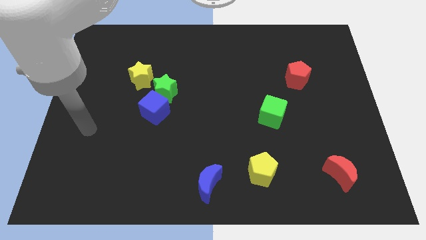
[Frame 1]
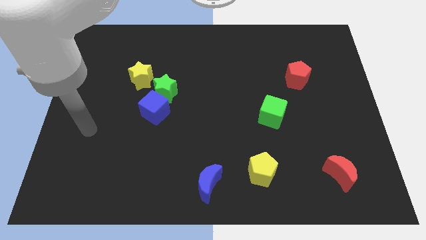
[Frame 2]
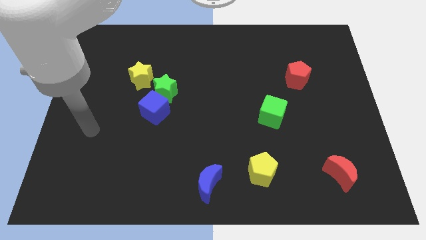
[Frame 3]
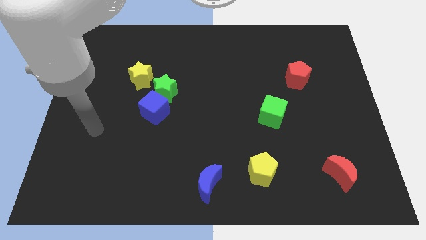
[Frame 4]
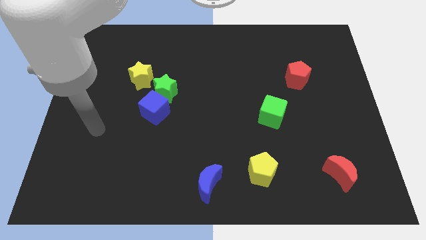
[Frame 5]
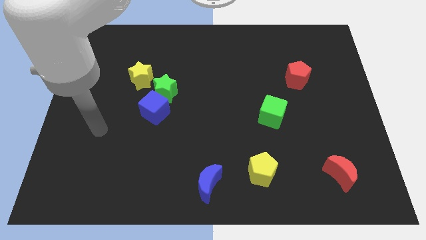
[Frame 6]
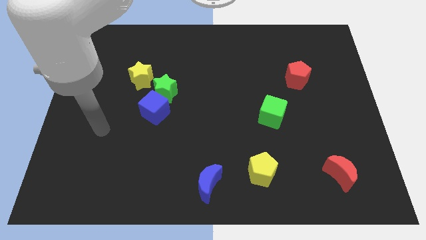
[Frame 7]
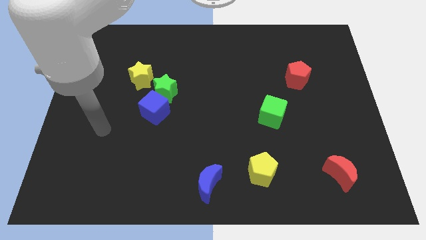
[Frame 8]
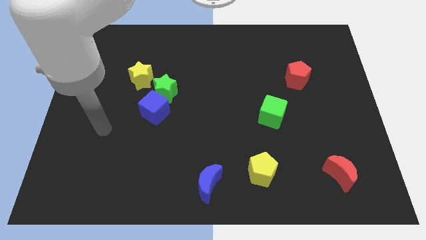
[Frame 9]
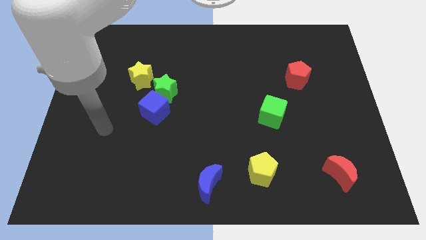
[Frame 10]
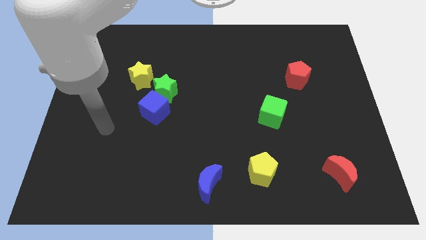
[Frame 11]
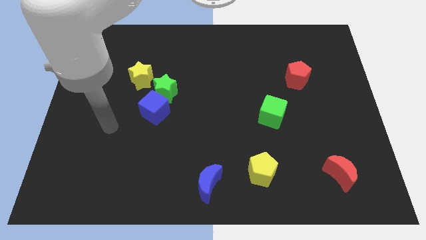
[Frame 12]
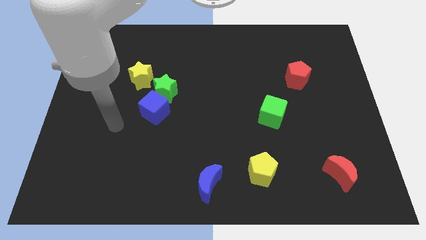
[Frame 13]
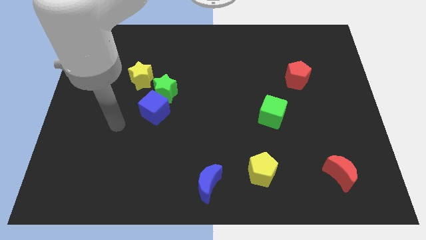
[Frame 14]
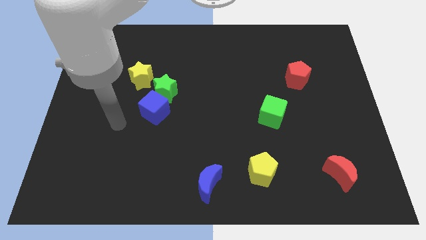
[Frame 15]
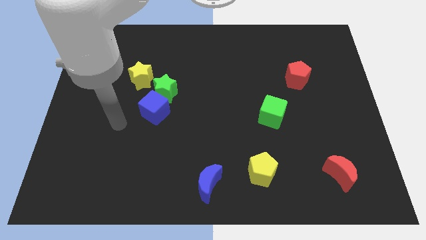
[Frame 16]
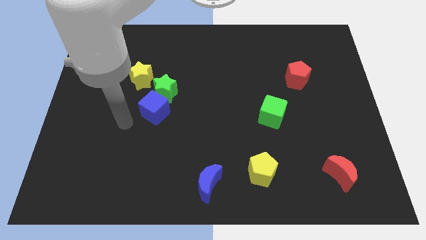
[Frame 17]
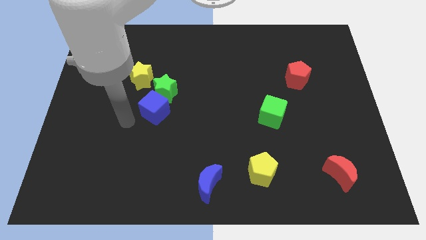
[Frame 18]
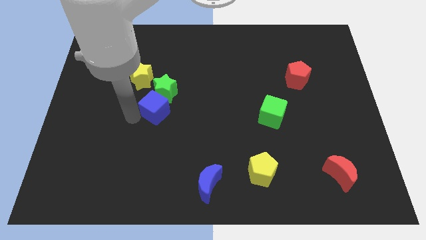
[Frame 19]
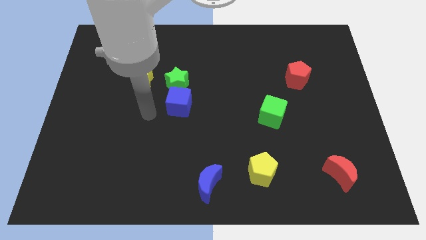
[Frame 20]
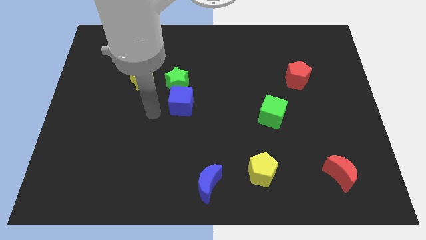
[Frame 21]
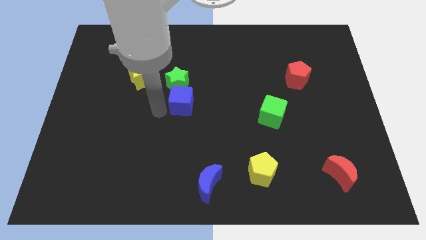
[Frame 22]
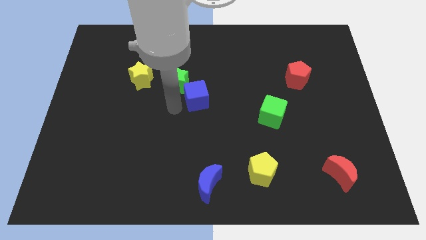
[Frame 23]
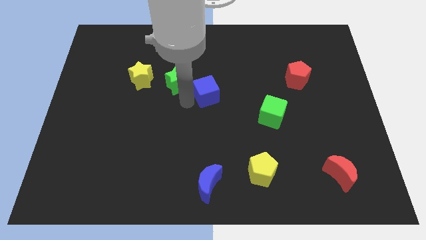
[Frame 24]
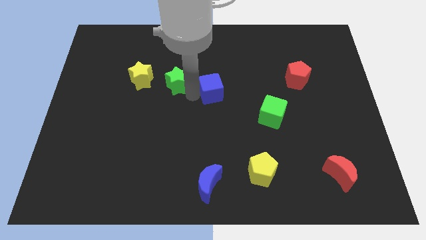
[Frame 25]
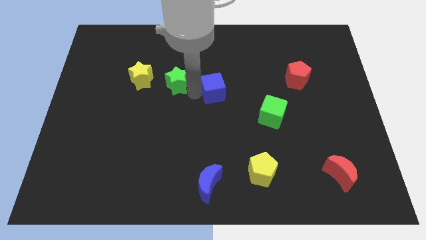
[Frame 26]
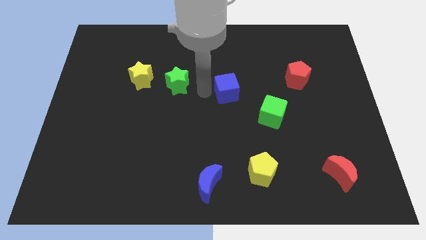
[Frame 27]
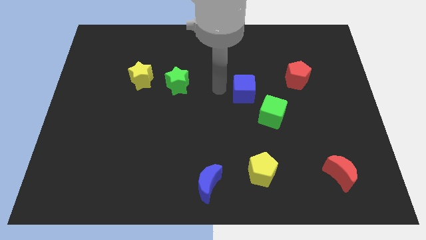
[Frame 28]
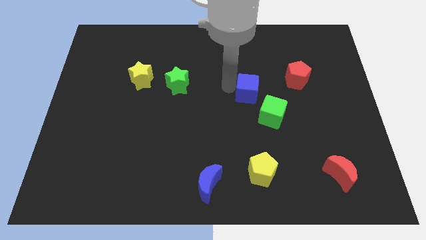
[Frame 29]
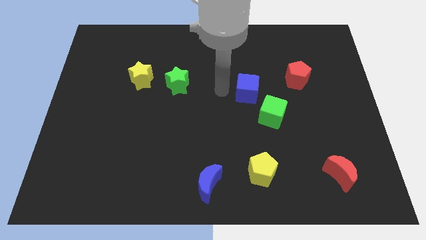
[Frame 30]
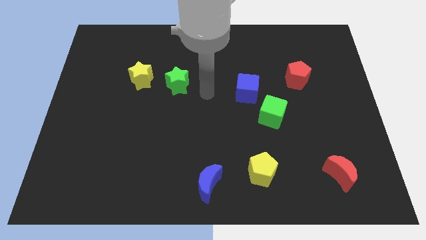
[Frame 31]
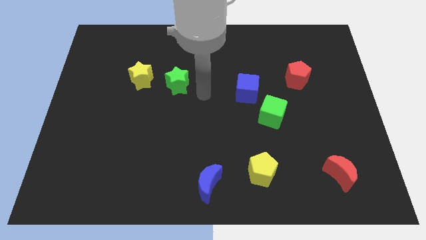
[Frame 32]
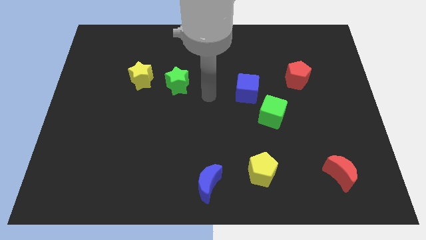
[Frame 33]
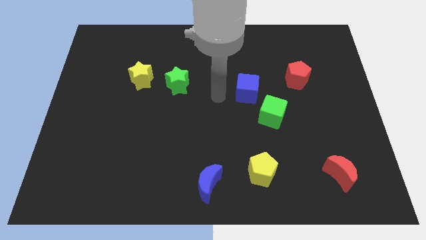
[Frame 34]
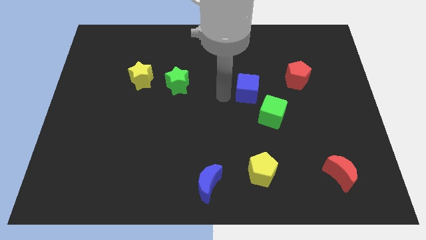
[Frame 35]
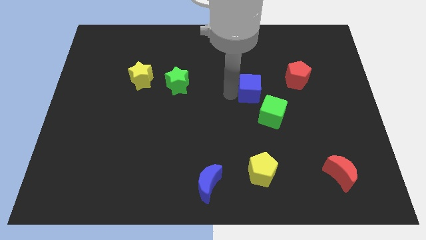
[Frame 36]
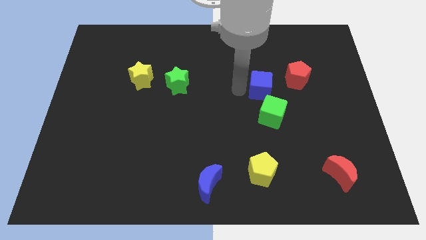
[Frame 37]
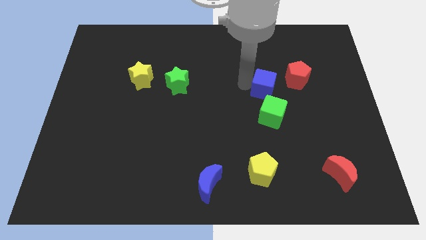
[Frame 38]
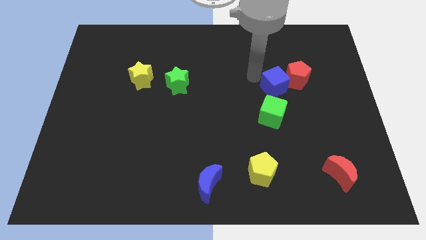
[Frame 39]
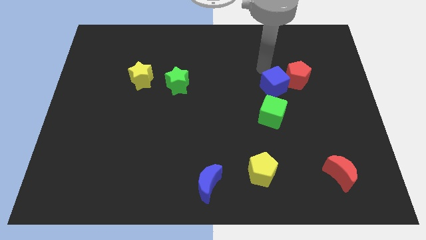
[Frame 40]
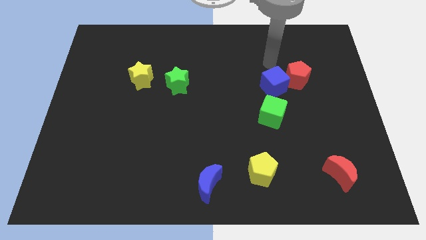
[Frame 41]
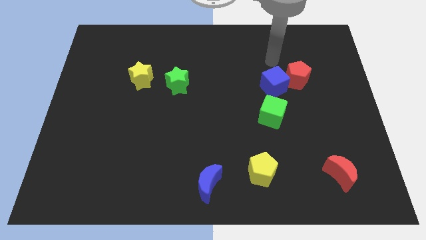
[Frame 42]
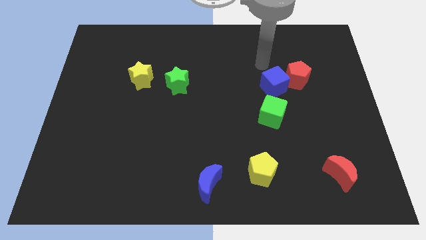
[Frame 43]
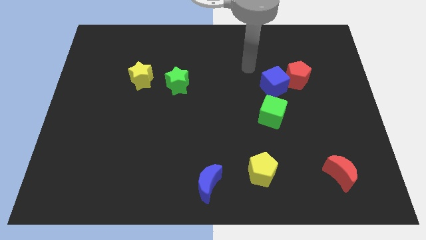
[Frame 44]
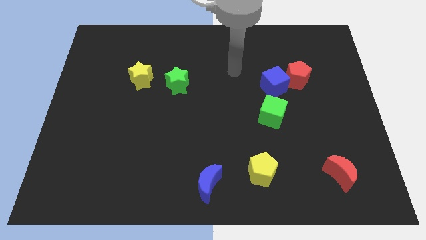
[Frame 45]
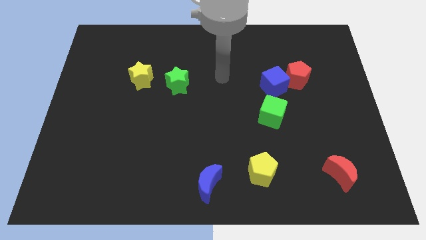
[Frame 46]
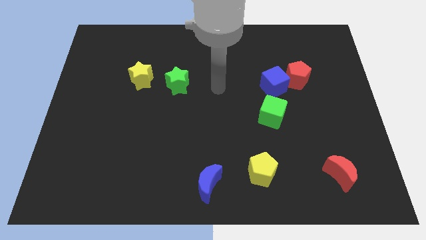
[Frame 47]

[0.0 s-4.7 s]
push the blue cube into the red pentagon

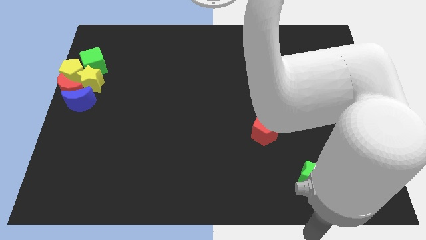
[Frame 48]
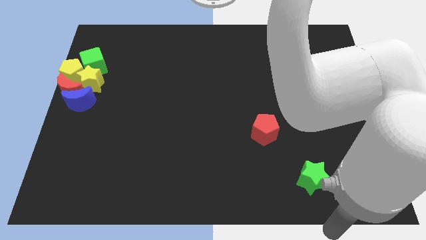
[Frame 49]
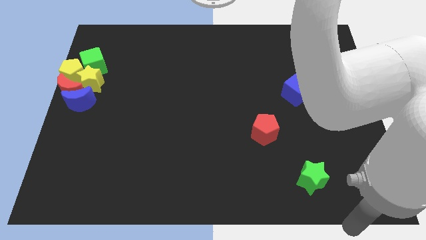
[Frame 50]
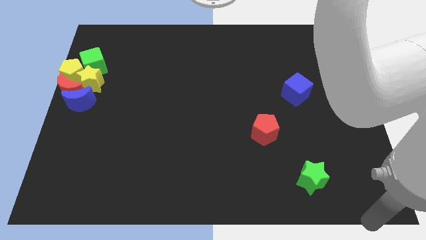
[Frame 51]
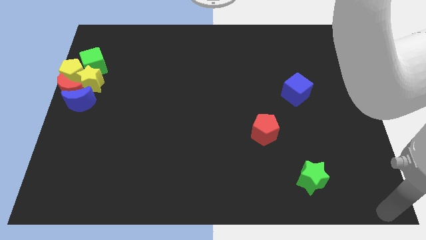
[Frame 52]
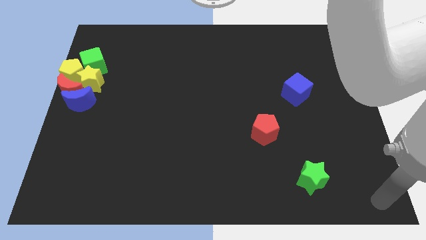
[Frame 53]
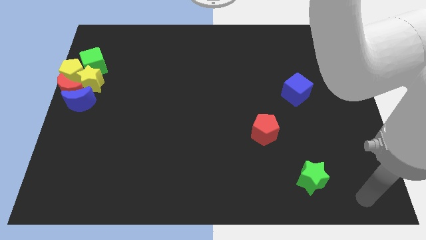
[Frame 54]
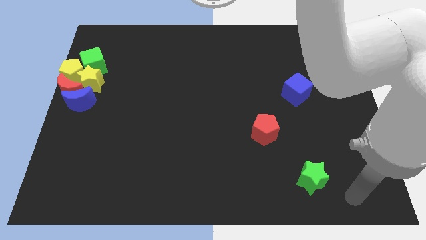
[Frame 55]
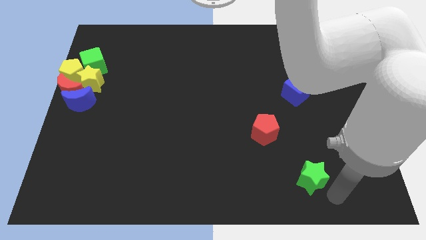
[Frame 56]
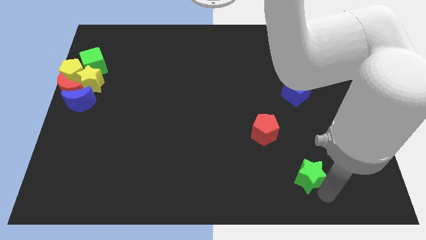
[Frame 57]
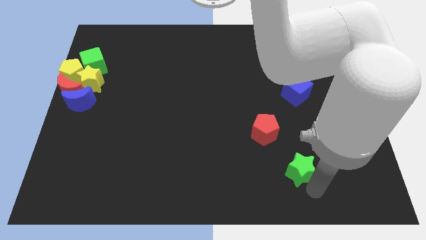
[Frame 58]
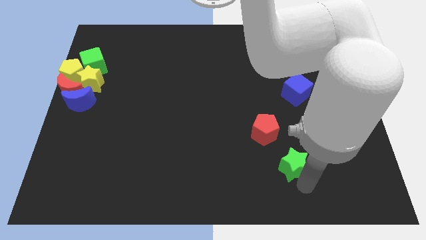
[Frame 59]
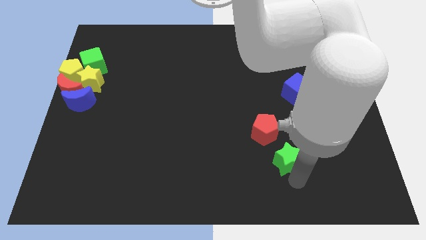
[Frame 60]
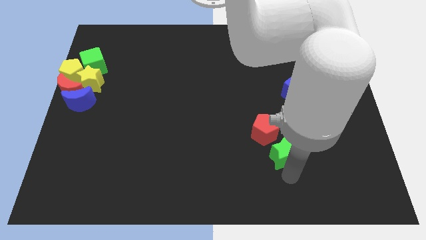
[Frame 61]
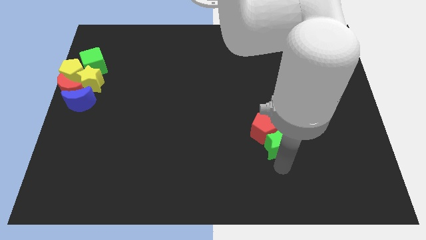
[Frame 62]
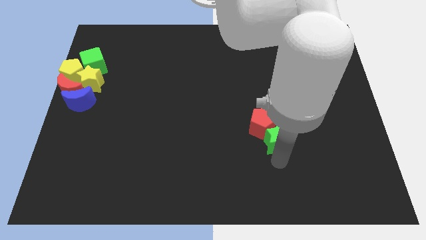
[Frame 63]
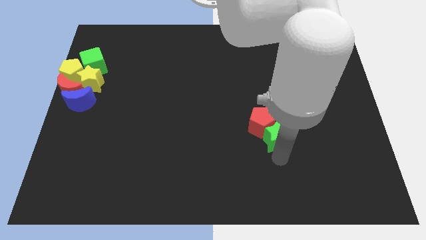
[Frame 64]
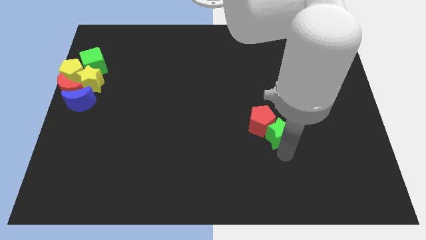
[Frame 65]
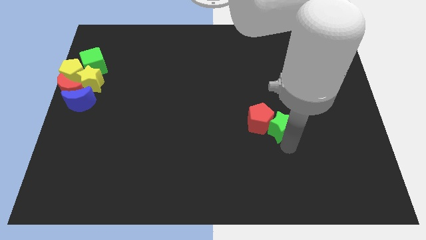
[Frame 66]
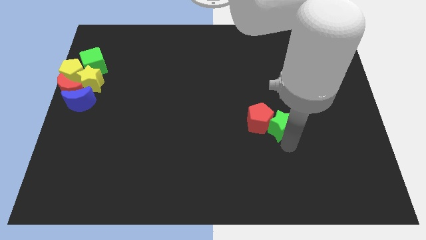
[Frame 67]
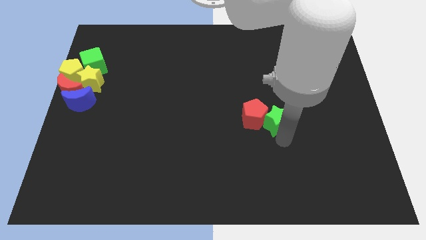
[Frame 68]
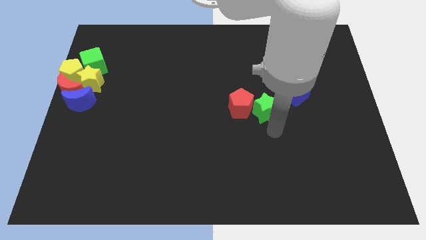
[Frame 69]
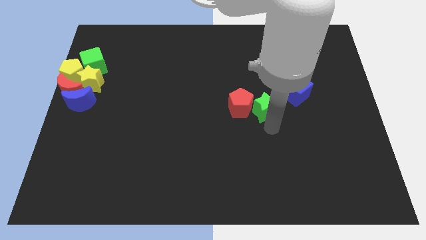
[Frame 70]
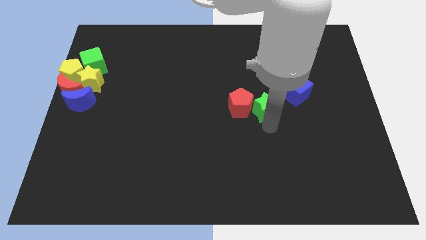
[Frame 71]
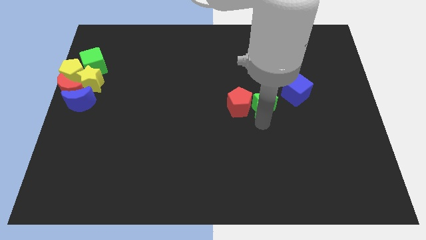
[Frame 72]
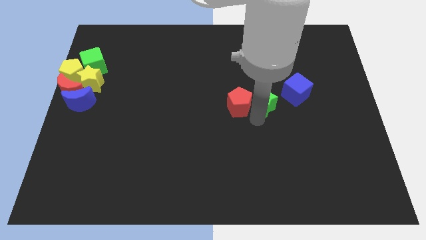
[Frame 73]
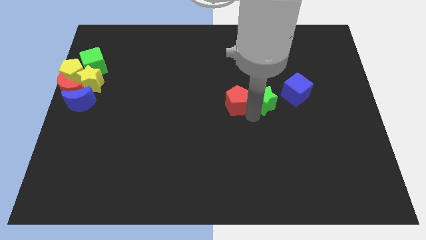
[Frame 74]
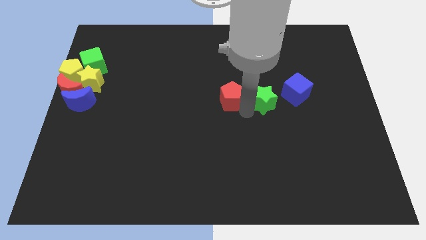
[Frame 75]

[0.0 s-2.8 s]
push the green star in between blue cube and red pentagon

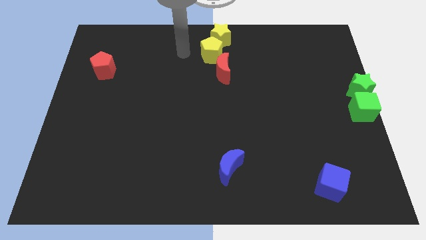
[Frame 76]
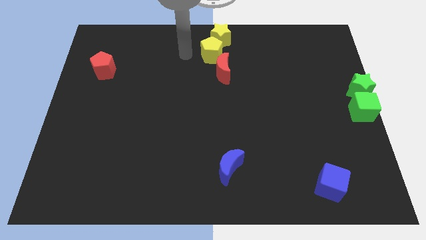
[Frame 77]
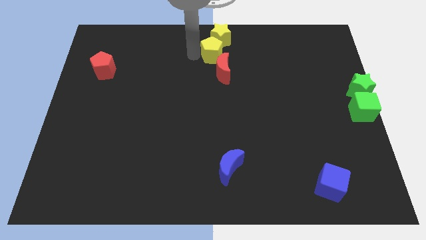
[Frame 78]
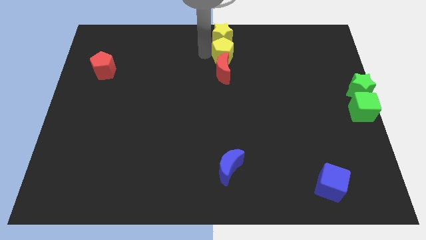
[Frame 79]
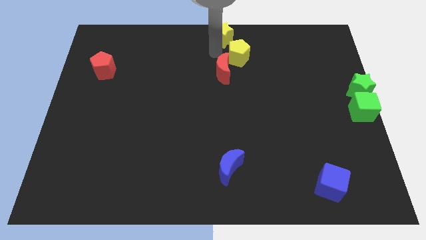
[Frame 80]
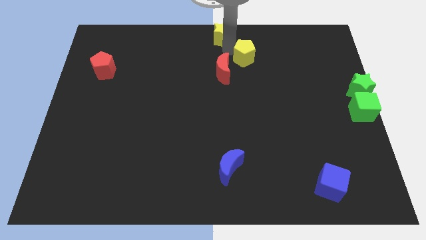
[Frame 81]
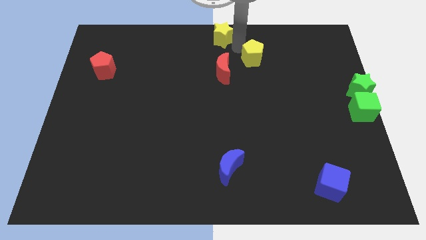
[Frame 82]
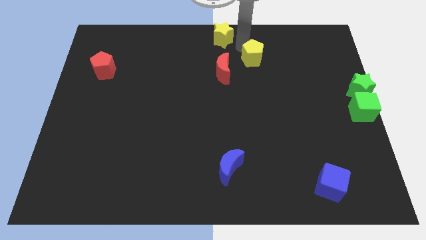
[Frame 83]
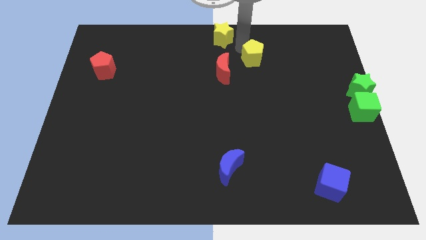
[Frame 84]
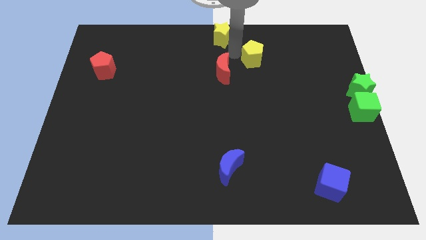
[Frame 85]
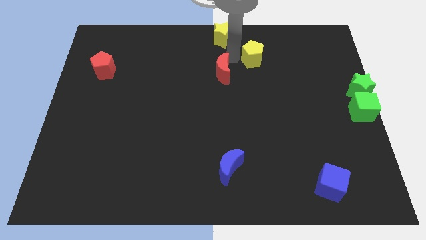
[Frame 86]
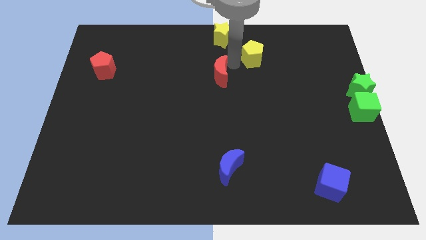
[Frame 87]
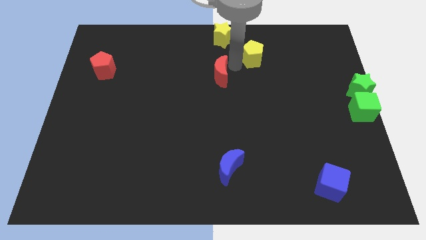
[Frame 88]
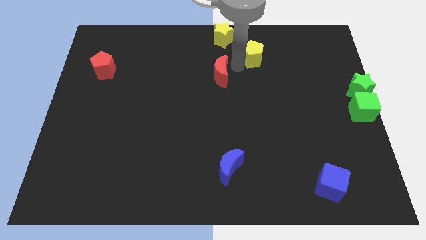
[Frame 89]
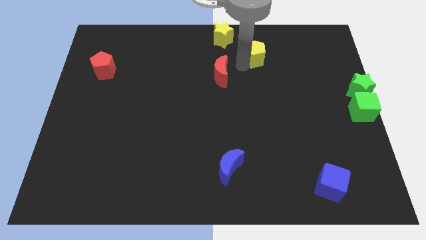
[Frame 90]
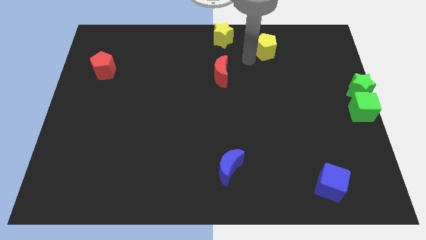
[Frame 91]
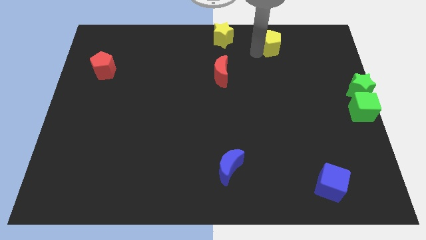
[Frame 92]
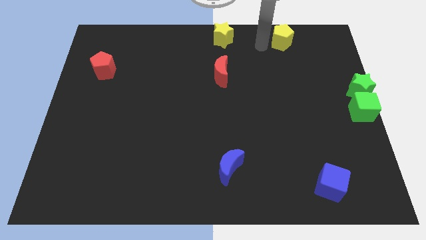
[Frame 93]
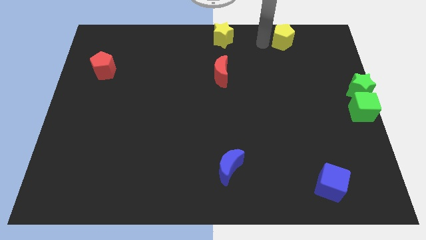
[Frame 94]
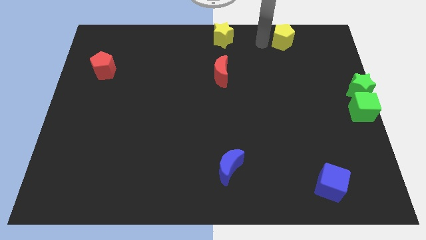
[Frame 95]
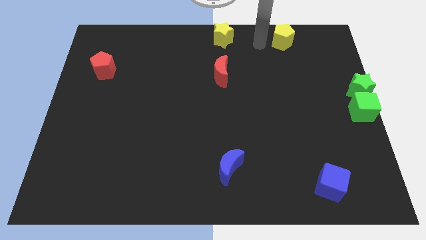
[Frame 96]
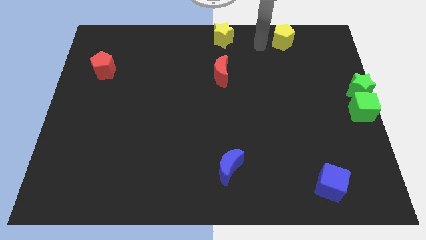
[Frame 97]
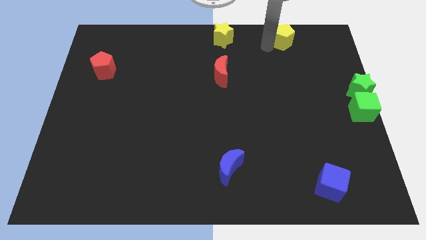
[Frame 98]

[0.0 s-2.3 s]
push the yellow pentagon away from the red moon and yellow star
